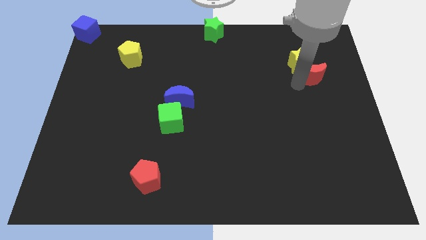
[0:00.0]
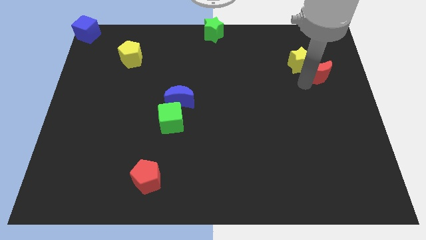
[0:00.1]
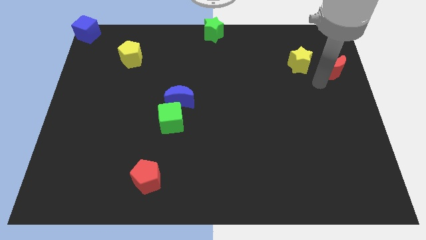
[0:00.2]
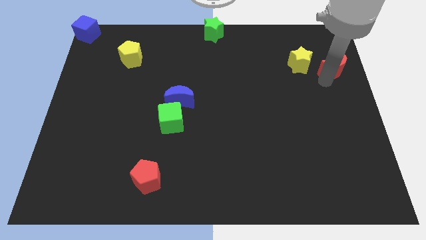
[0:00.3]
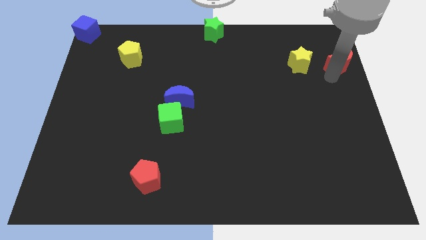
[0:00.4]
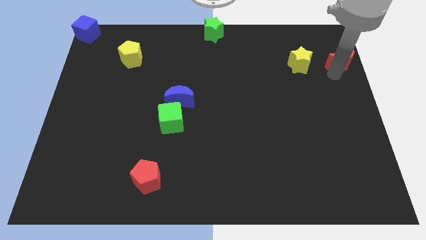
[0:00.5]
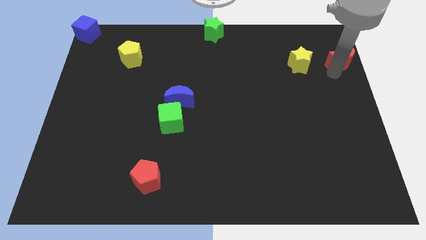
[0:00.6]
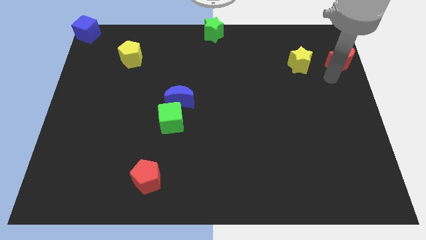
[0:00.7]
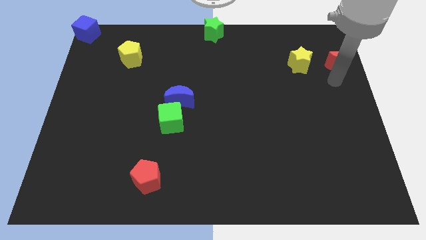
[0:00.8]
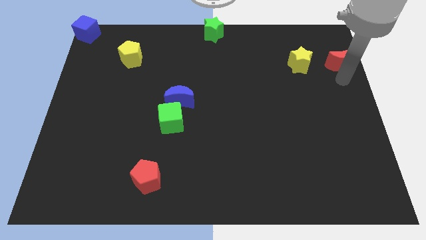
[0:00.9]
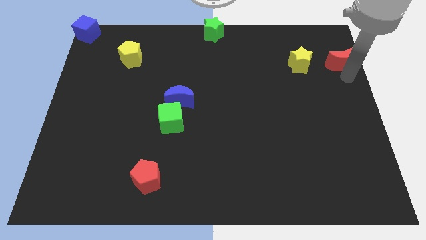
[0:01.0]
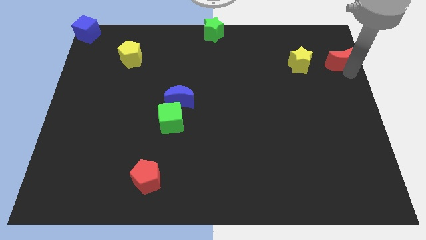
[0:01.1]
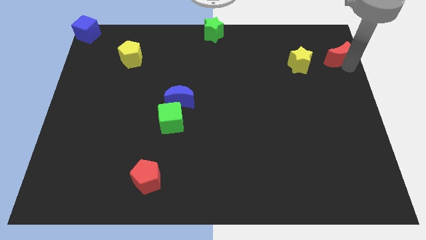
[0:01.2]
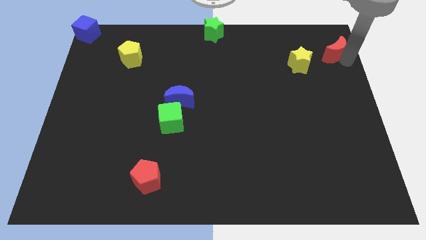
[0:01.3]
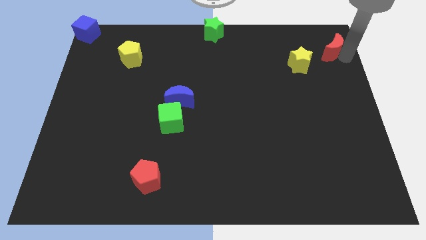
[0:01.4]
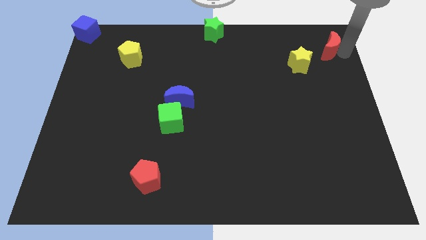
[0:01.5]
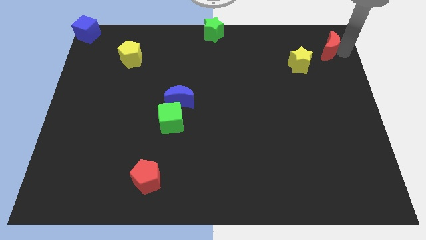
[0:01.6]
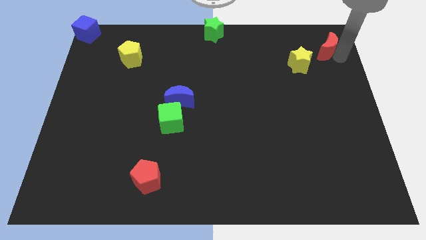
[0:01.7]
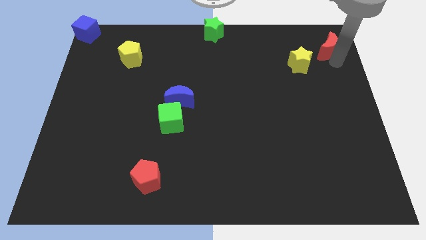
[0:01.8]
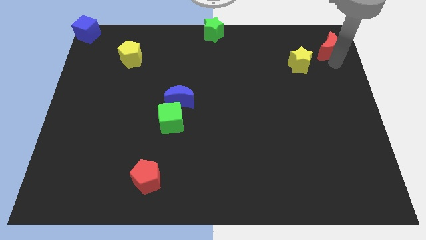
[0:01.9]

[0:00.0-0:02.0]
separate the red crescent from yellow star

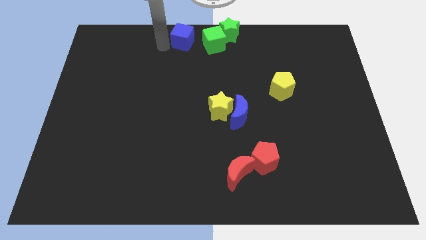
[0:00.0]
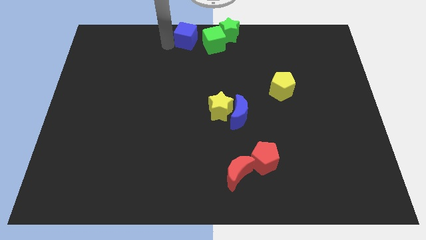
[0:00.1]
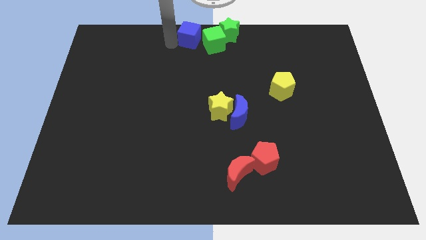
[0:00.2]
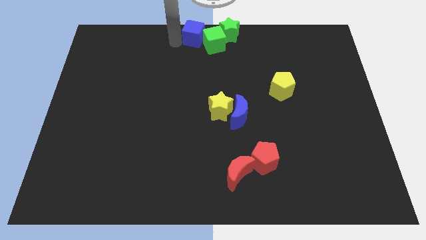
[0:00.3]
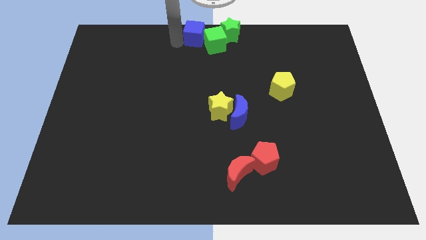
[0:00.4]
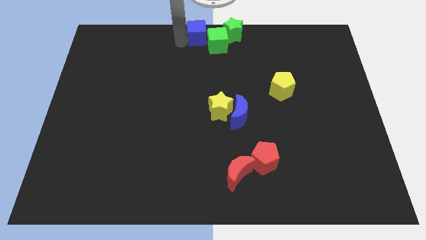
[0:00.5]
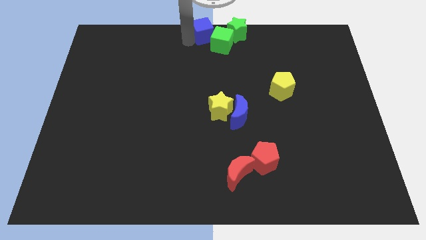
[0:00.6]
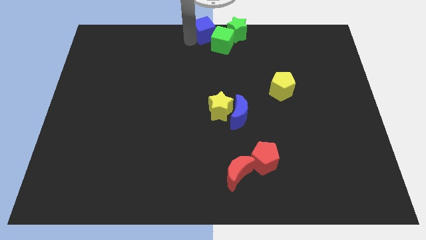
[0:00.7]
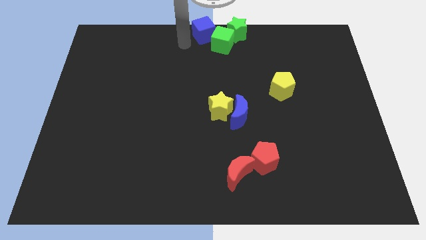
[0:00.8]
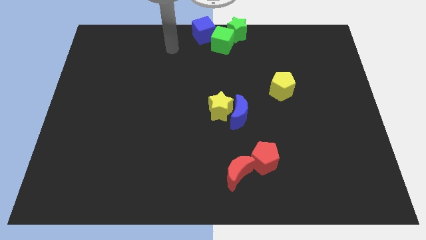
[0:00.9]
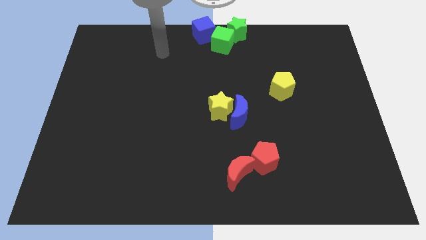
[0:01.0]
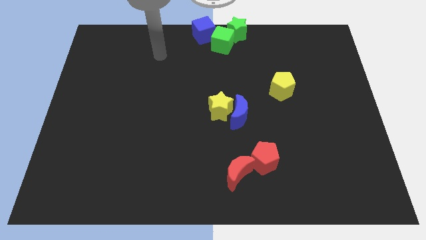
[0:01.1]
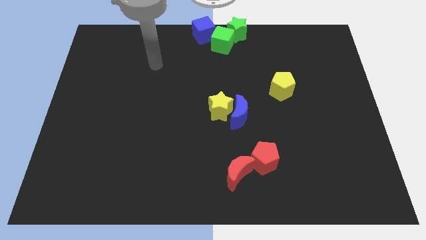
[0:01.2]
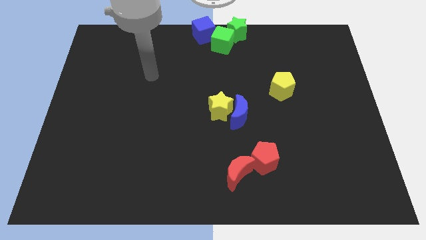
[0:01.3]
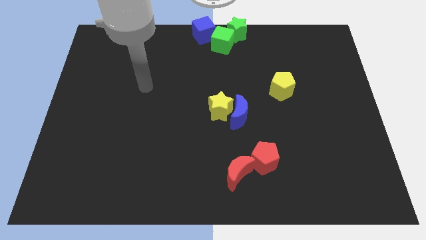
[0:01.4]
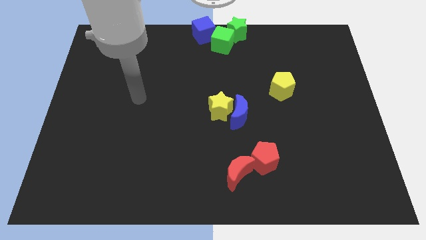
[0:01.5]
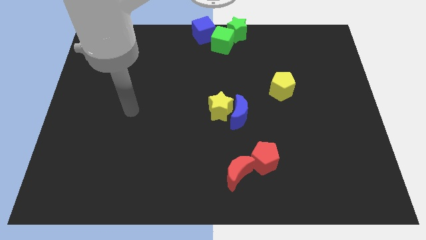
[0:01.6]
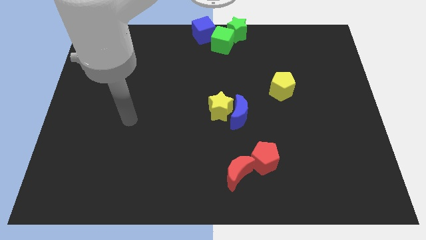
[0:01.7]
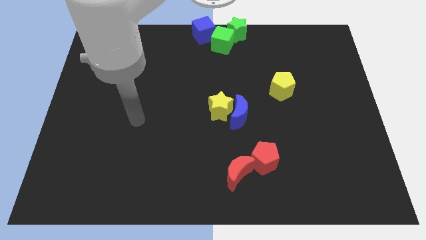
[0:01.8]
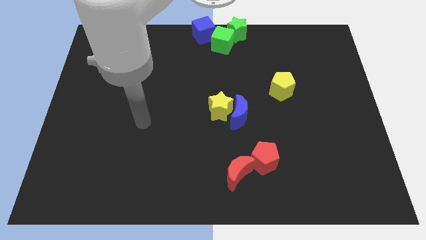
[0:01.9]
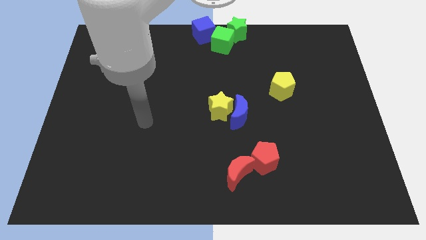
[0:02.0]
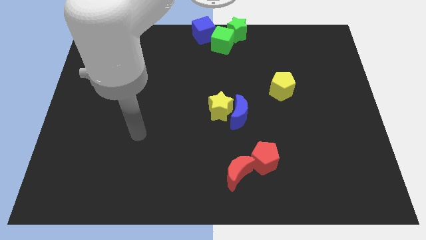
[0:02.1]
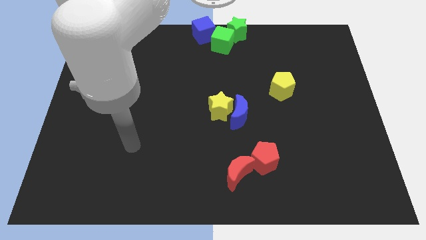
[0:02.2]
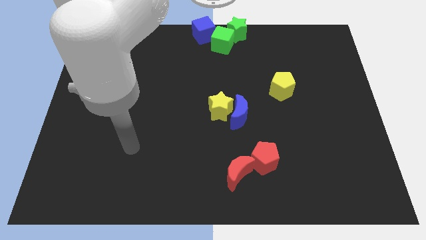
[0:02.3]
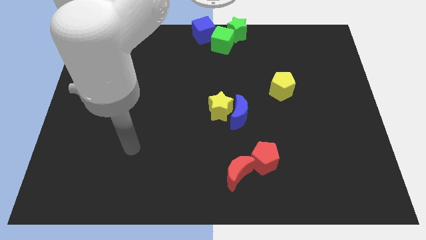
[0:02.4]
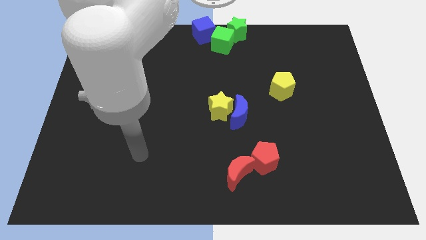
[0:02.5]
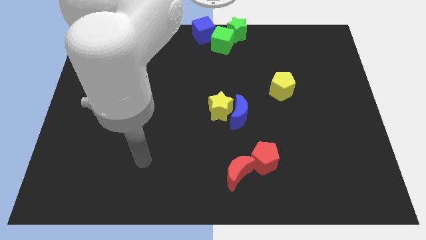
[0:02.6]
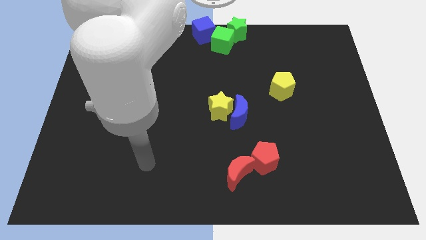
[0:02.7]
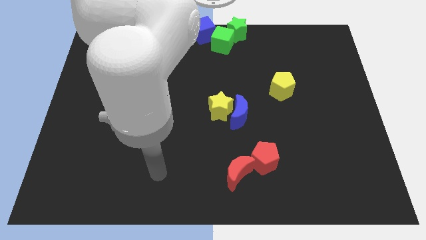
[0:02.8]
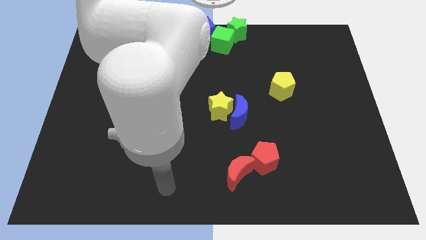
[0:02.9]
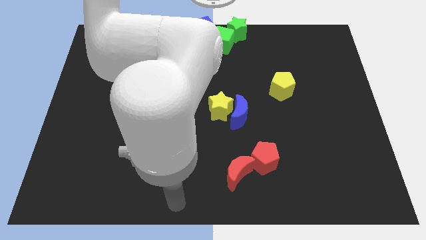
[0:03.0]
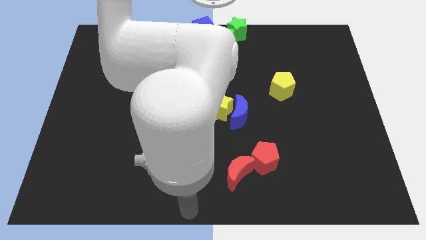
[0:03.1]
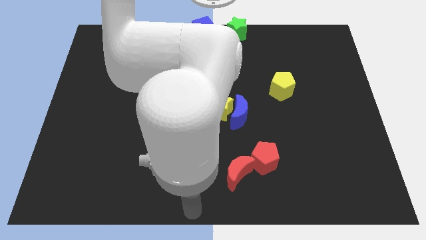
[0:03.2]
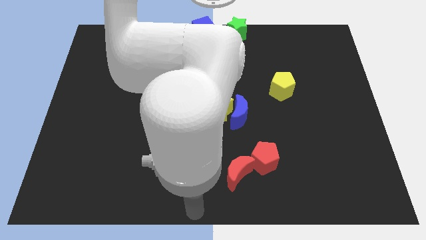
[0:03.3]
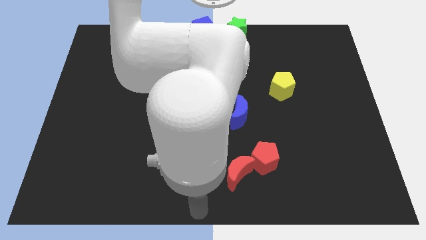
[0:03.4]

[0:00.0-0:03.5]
put the blue cube at the top center

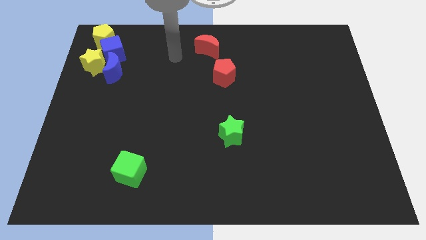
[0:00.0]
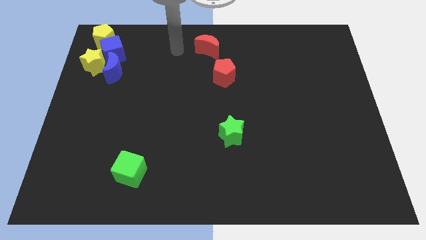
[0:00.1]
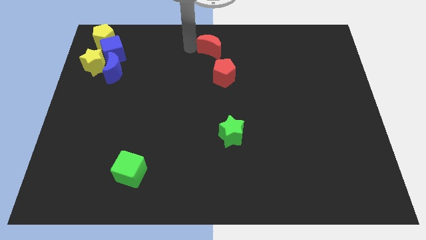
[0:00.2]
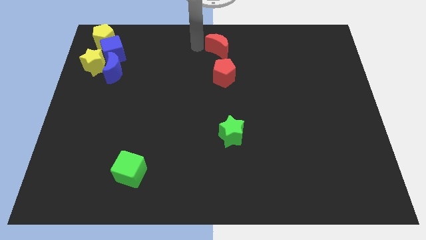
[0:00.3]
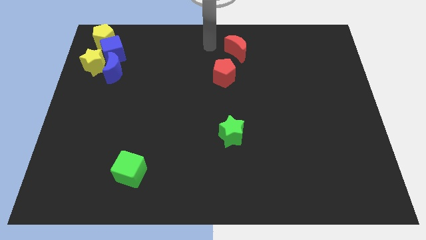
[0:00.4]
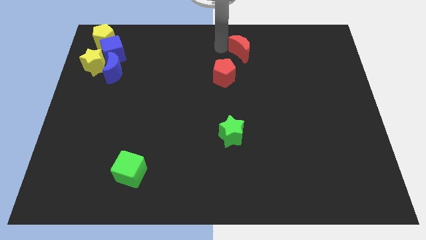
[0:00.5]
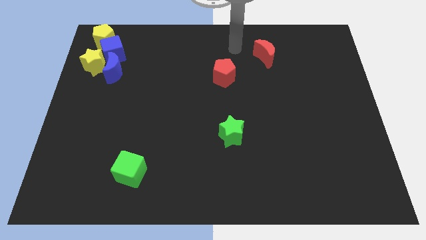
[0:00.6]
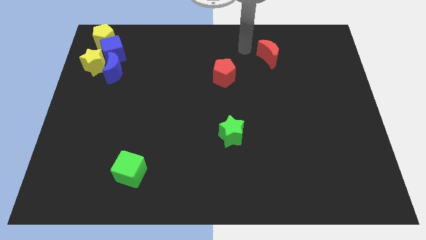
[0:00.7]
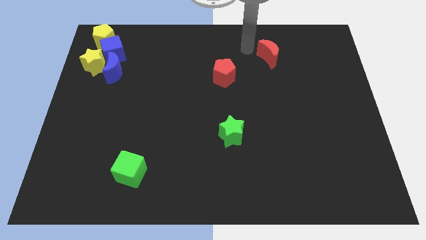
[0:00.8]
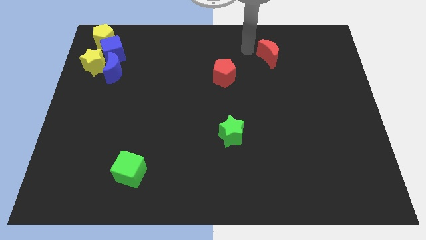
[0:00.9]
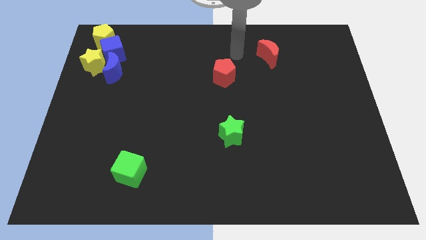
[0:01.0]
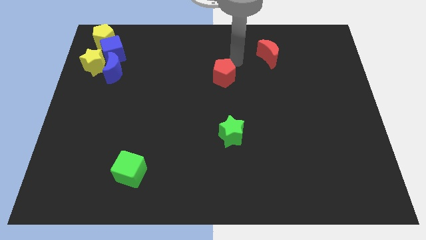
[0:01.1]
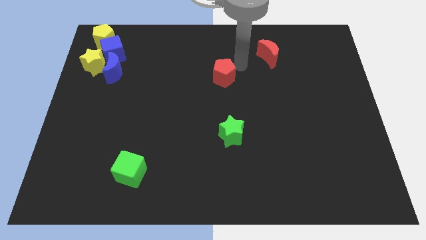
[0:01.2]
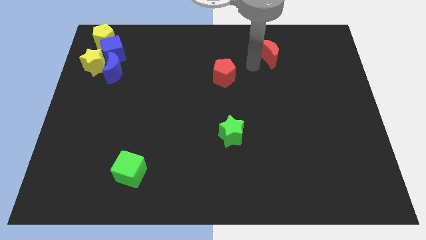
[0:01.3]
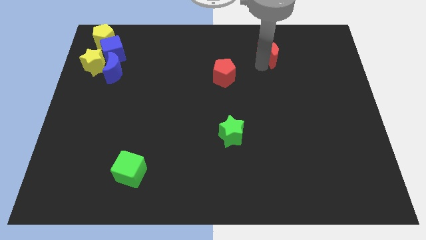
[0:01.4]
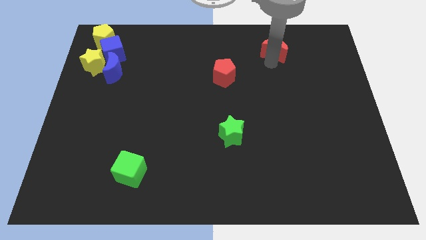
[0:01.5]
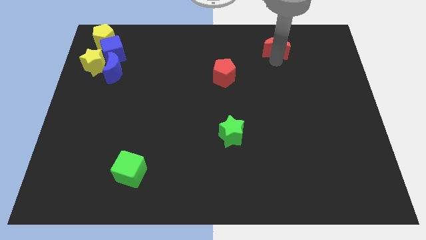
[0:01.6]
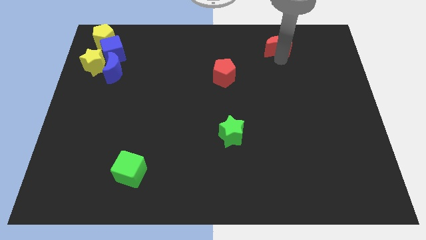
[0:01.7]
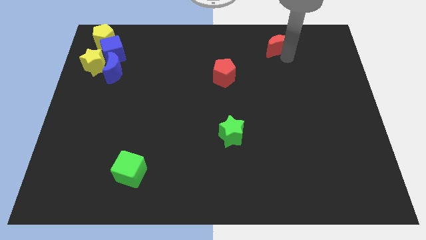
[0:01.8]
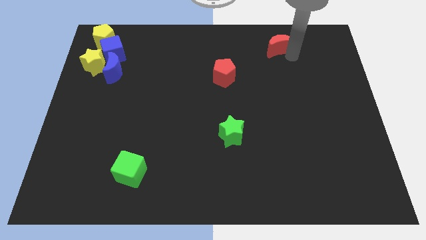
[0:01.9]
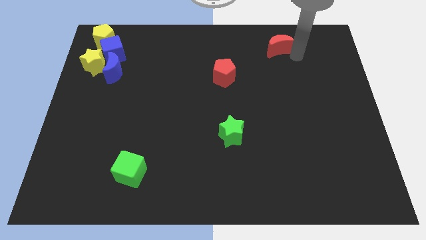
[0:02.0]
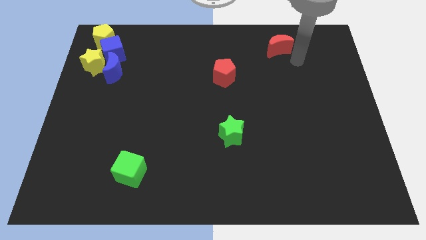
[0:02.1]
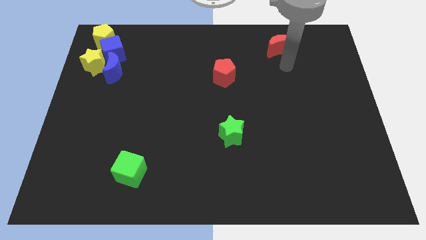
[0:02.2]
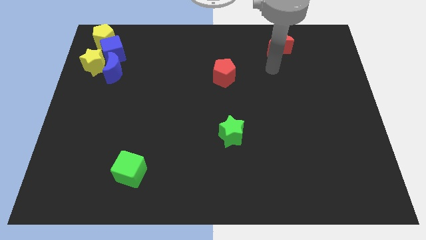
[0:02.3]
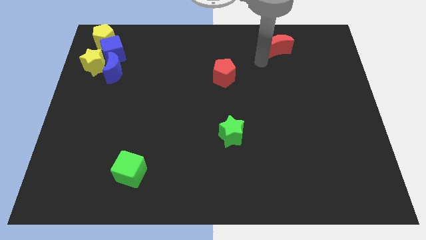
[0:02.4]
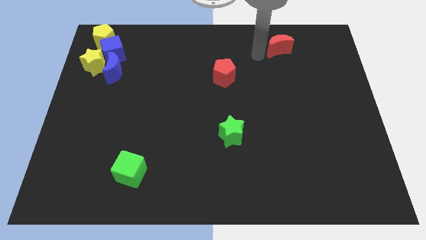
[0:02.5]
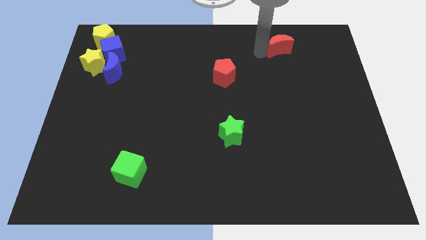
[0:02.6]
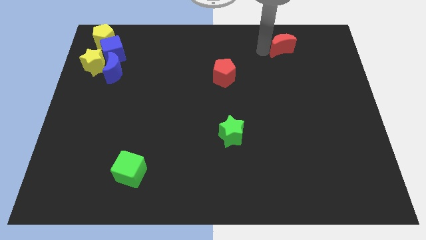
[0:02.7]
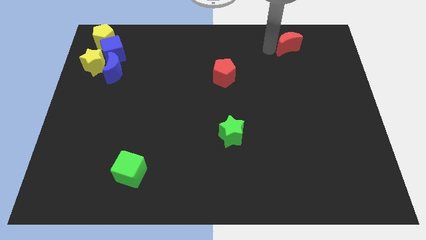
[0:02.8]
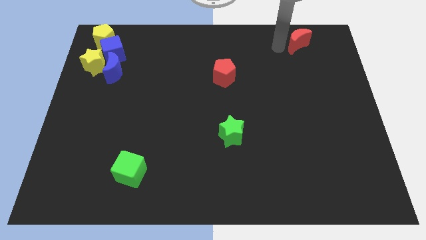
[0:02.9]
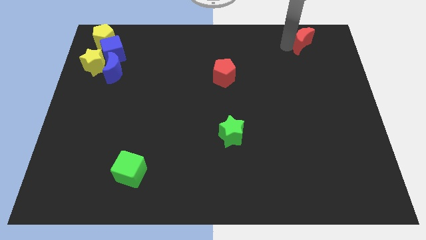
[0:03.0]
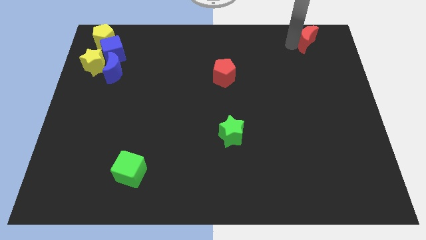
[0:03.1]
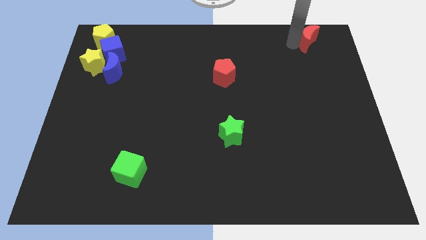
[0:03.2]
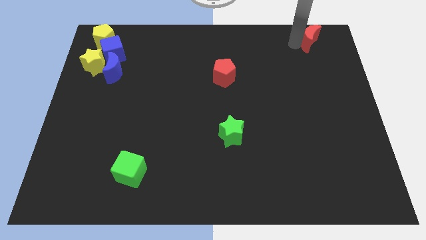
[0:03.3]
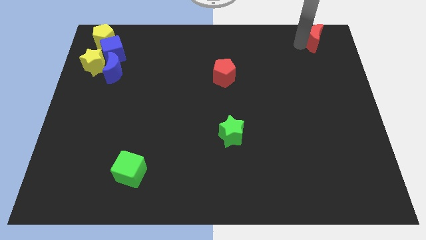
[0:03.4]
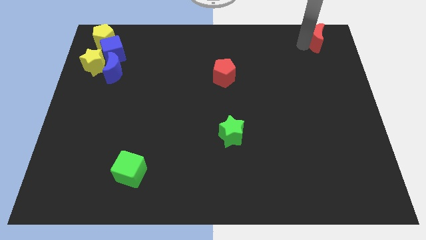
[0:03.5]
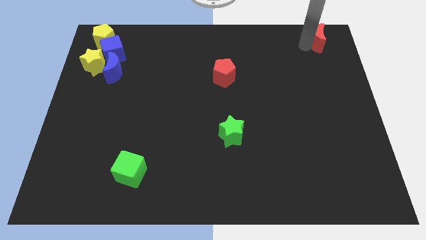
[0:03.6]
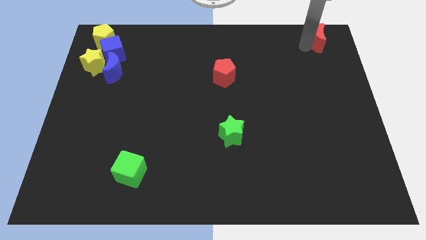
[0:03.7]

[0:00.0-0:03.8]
move the red crescent to the top right corner of the board
